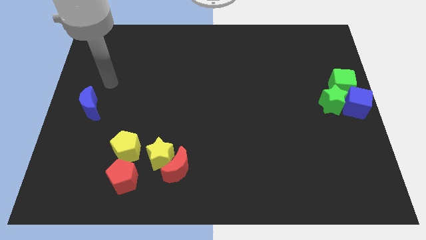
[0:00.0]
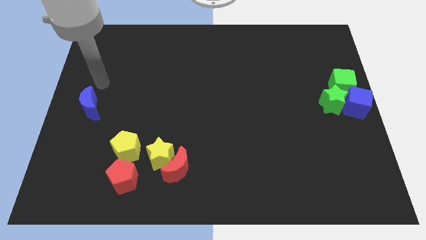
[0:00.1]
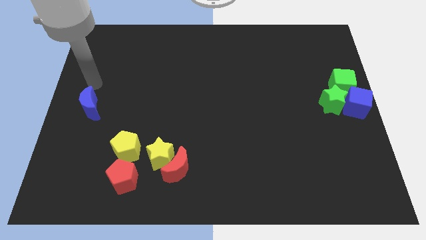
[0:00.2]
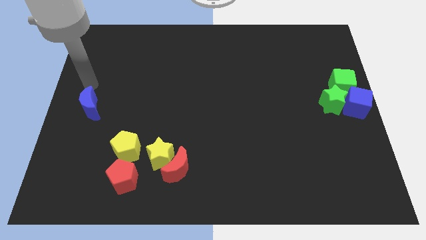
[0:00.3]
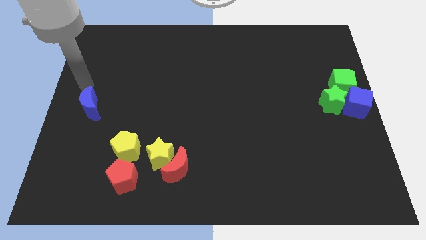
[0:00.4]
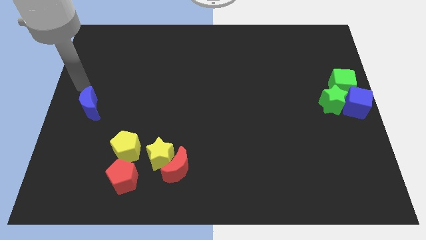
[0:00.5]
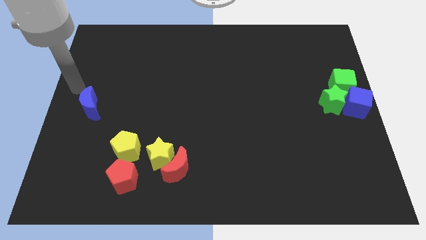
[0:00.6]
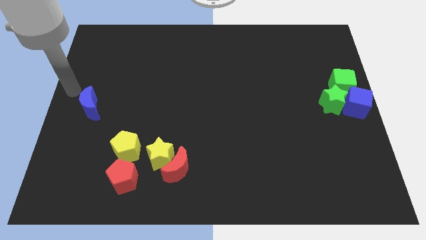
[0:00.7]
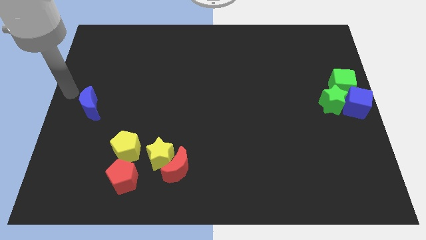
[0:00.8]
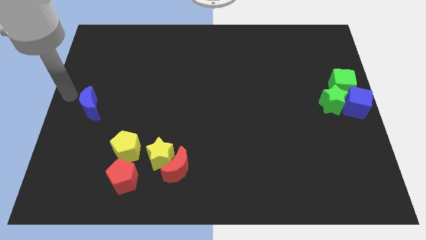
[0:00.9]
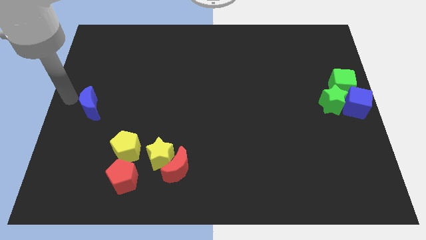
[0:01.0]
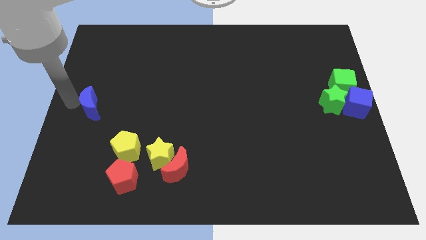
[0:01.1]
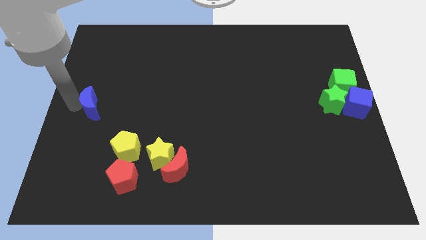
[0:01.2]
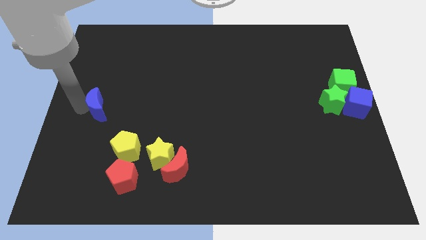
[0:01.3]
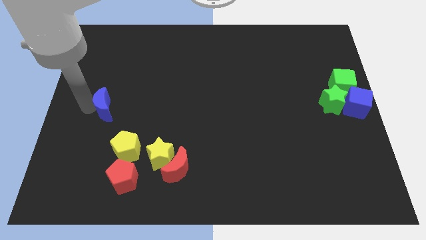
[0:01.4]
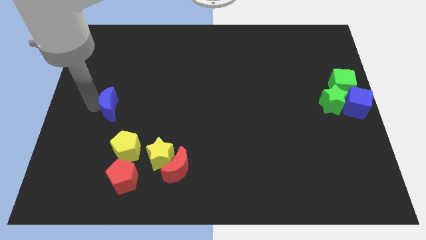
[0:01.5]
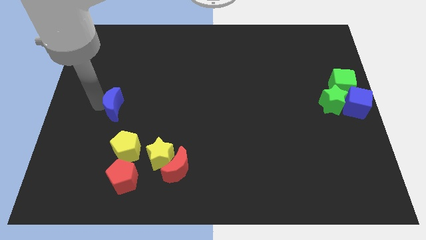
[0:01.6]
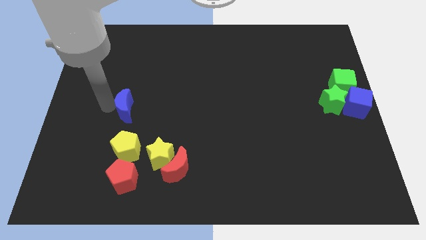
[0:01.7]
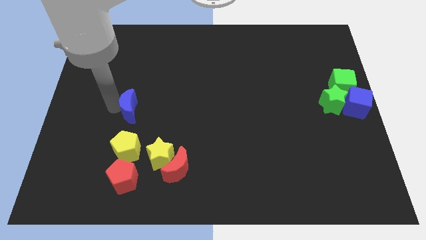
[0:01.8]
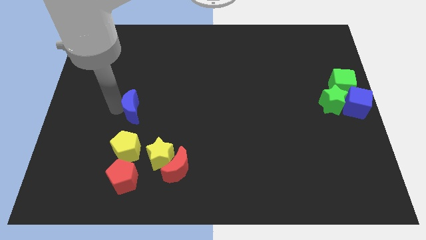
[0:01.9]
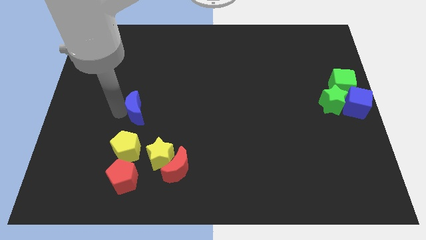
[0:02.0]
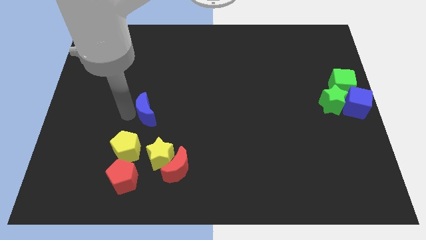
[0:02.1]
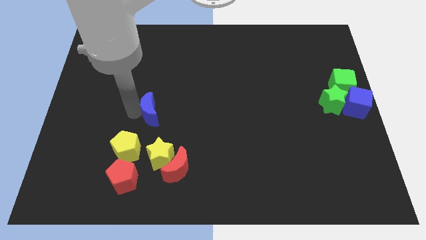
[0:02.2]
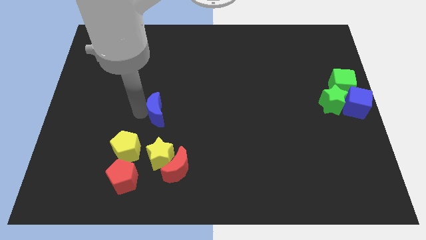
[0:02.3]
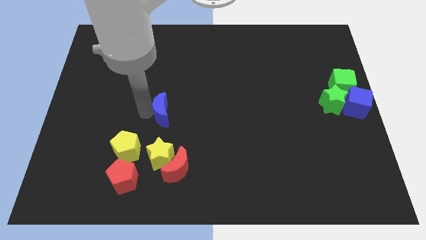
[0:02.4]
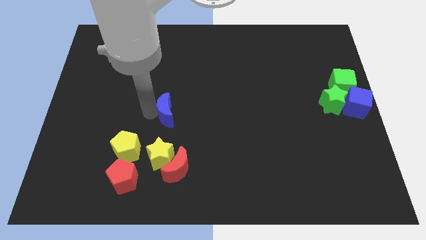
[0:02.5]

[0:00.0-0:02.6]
place the blue moon above the yellow star

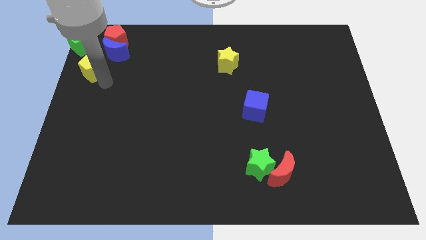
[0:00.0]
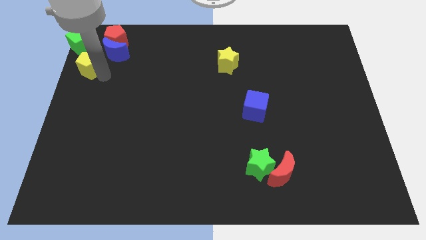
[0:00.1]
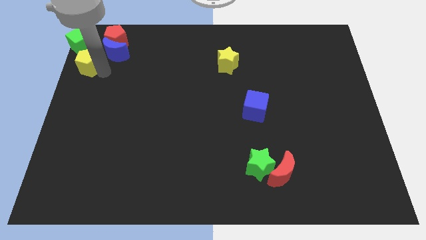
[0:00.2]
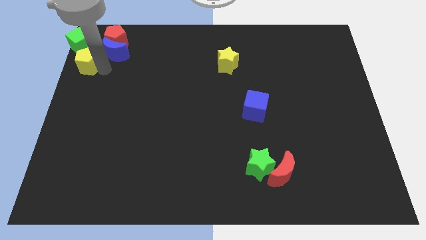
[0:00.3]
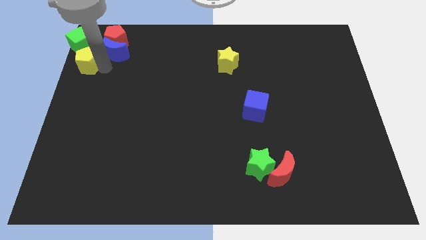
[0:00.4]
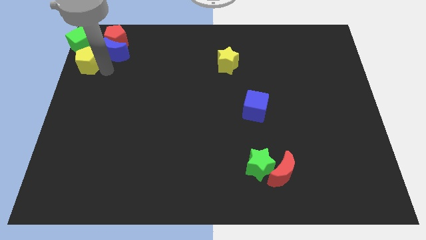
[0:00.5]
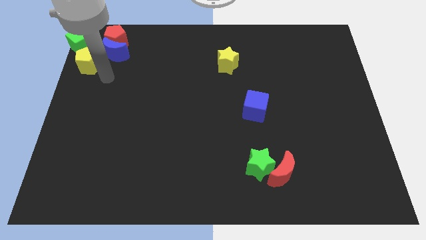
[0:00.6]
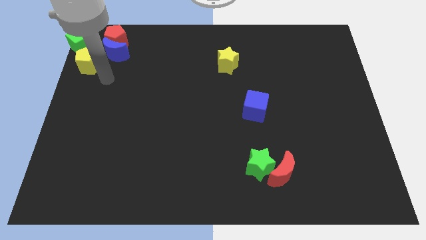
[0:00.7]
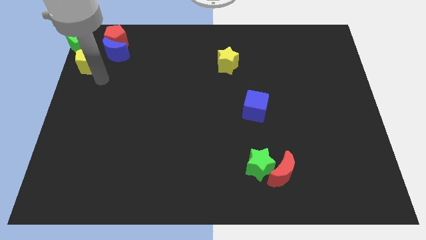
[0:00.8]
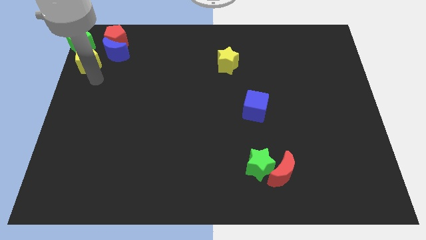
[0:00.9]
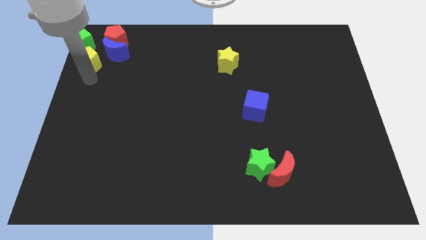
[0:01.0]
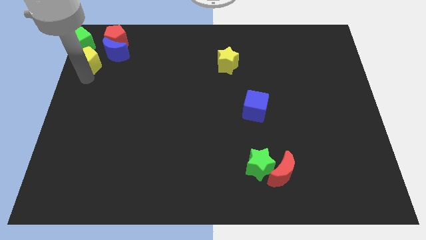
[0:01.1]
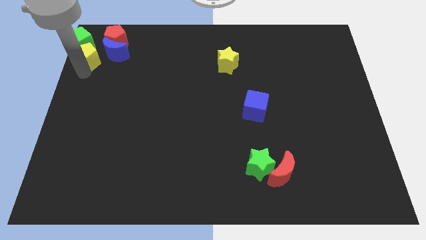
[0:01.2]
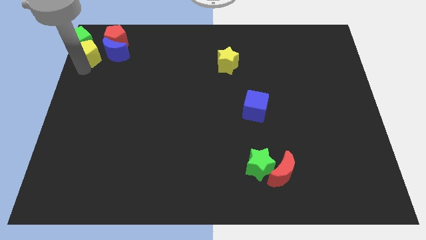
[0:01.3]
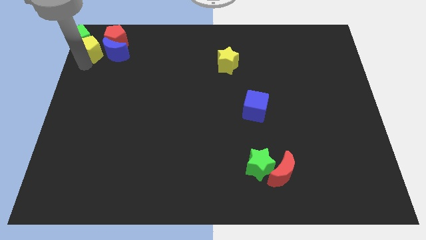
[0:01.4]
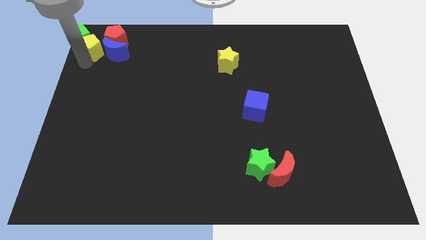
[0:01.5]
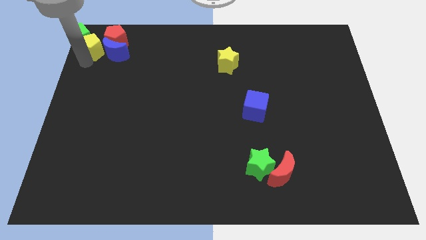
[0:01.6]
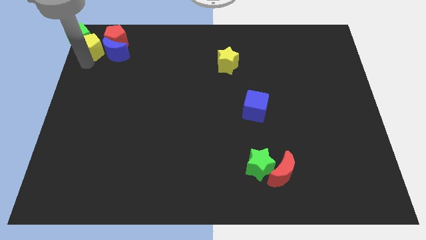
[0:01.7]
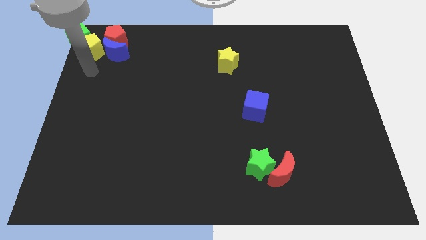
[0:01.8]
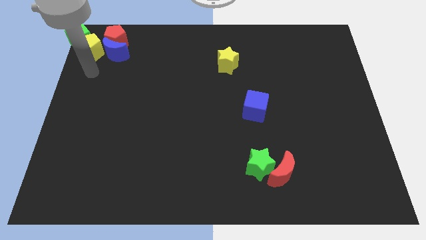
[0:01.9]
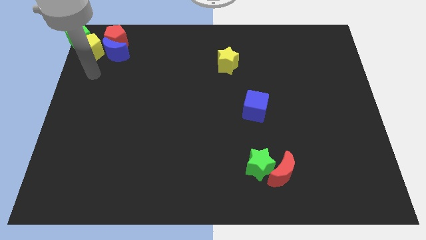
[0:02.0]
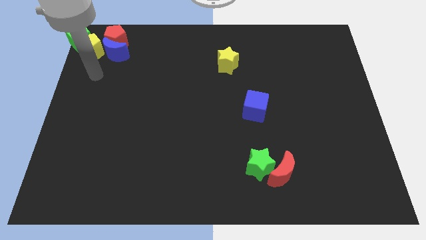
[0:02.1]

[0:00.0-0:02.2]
push the yellow pentagon into the green cube

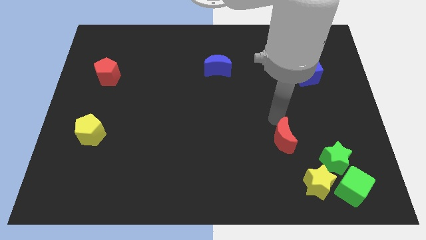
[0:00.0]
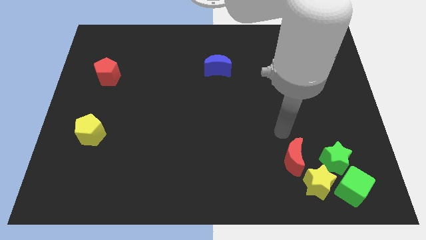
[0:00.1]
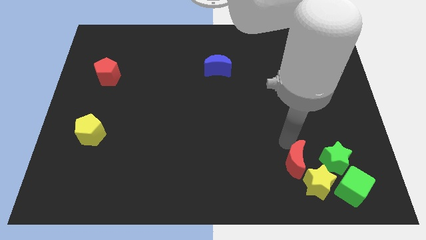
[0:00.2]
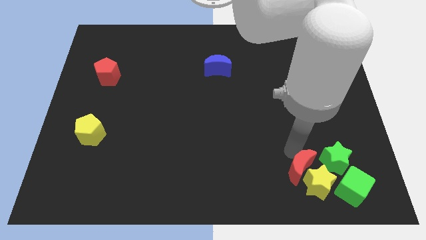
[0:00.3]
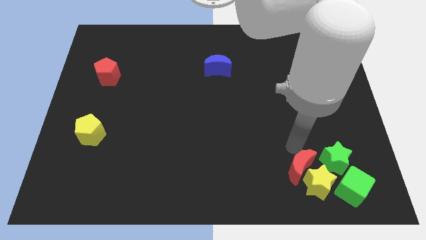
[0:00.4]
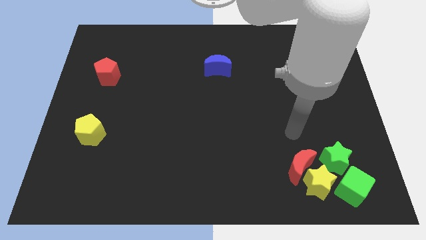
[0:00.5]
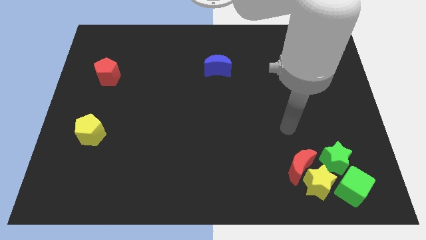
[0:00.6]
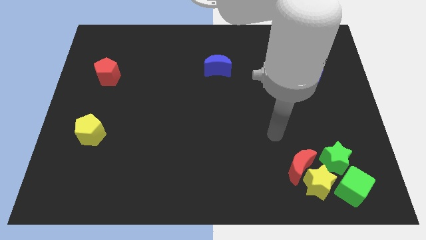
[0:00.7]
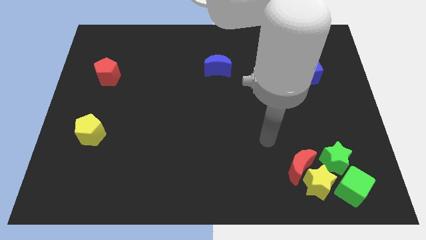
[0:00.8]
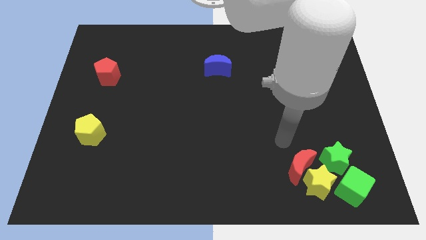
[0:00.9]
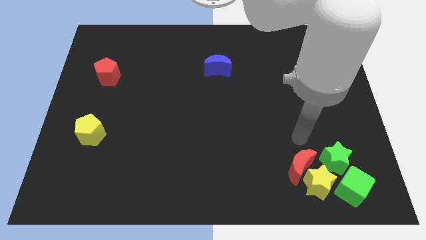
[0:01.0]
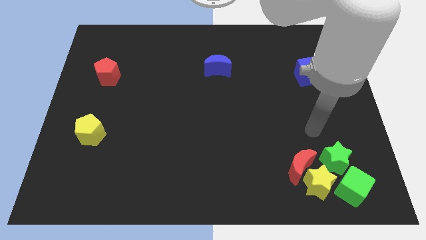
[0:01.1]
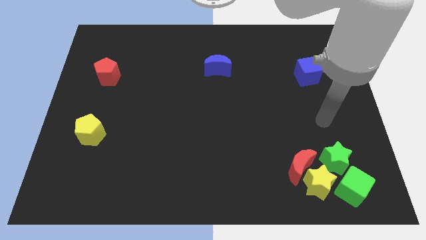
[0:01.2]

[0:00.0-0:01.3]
place the red crescent close to the yellow star and green star

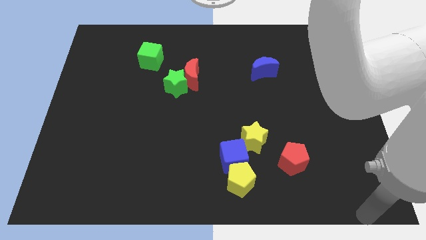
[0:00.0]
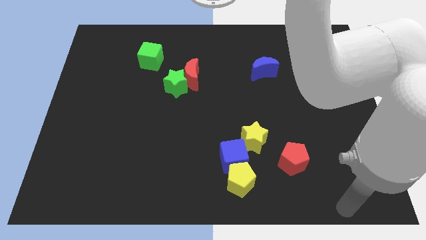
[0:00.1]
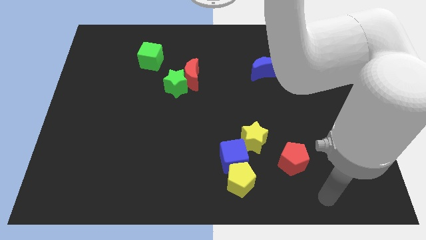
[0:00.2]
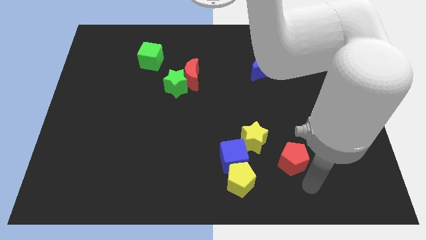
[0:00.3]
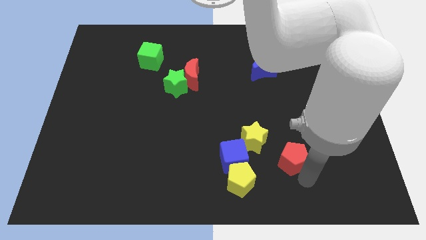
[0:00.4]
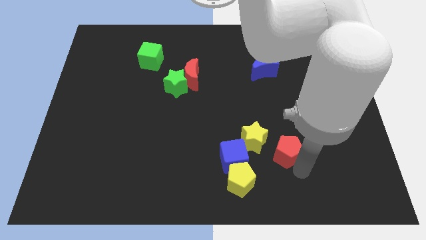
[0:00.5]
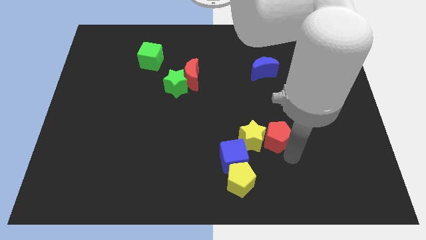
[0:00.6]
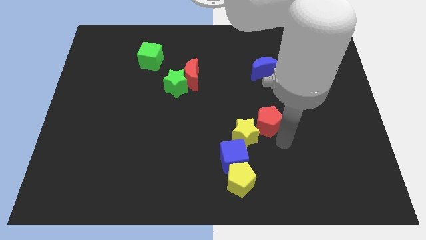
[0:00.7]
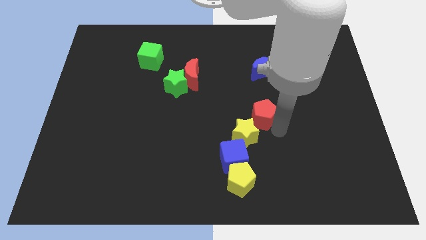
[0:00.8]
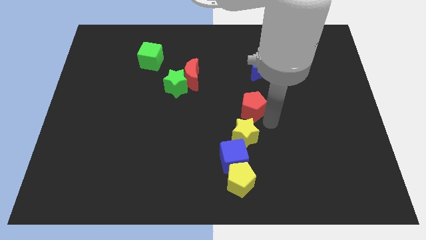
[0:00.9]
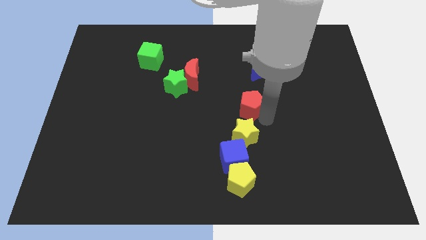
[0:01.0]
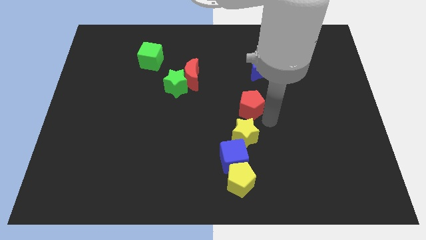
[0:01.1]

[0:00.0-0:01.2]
place red pentagon above yellow star

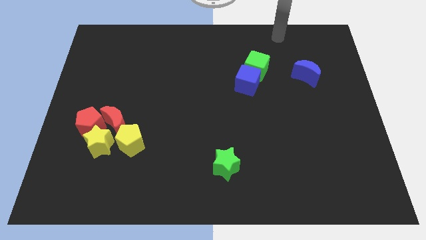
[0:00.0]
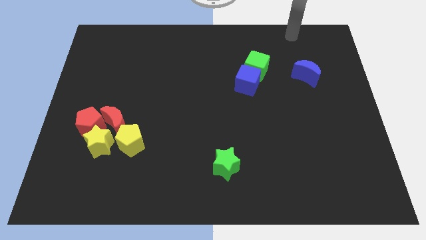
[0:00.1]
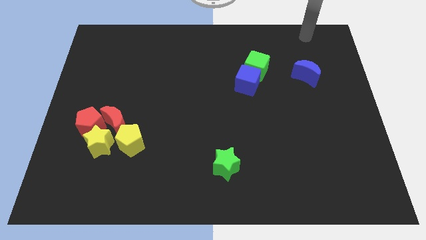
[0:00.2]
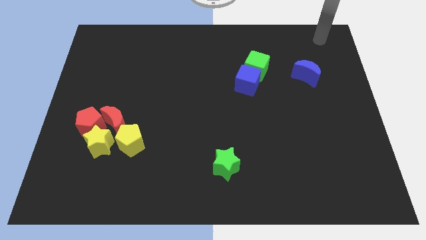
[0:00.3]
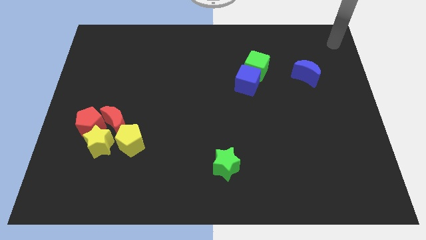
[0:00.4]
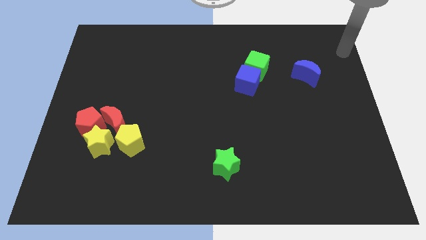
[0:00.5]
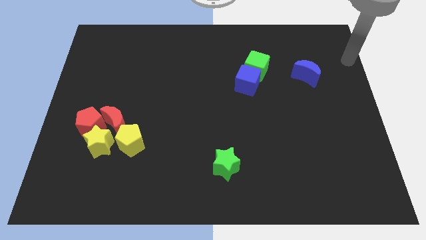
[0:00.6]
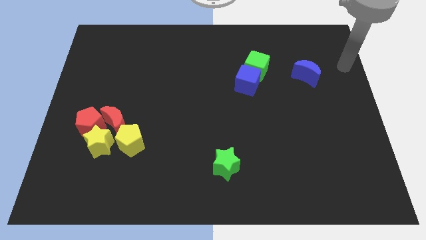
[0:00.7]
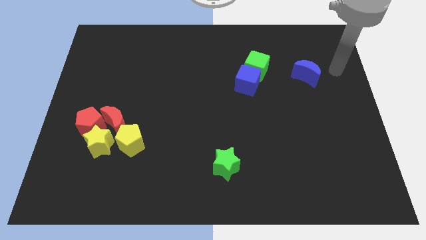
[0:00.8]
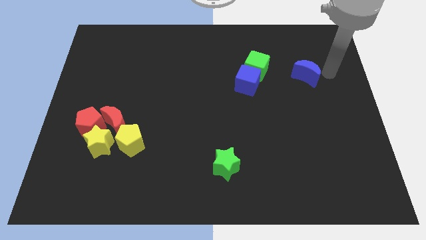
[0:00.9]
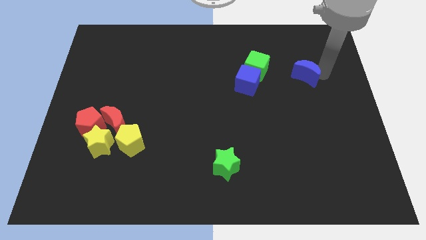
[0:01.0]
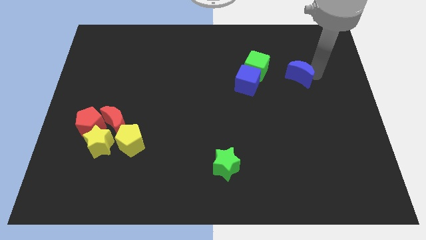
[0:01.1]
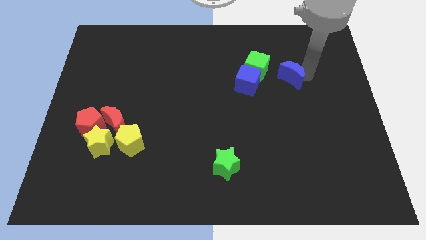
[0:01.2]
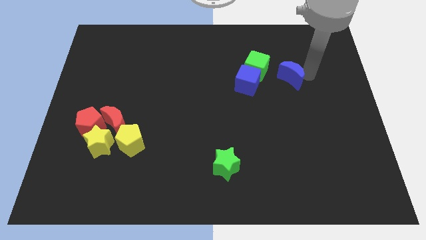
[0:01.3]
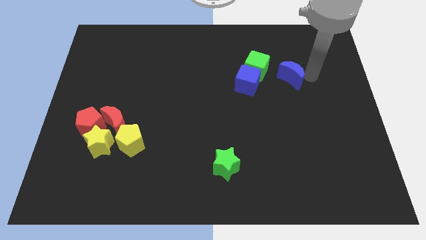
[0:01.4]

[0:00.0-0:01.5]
move the blue crescent to the right of the green cube
